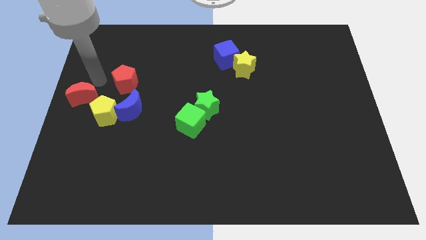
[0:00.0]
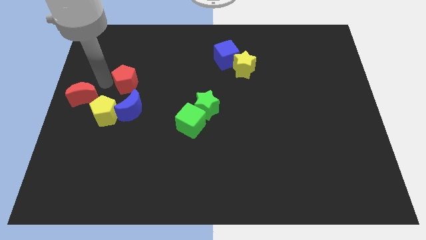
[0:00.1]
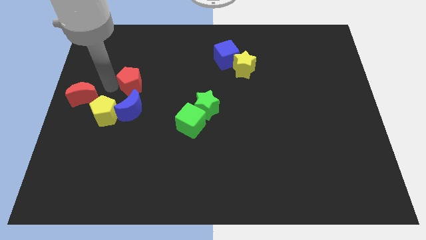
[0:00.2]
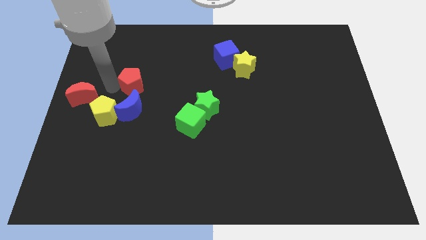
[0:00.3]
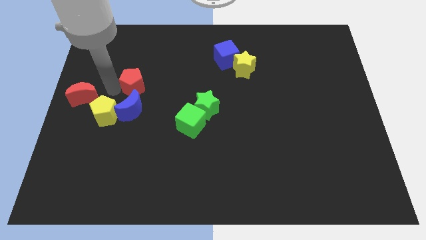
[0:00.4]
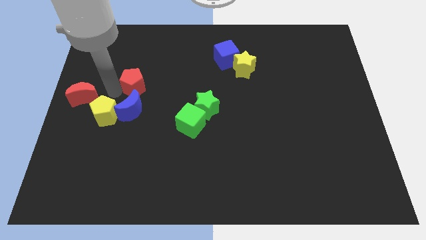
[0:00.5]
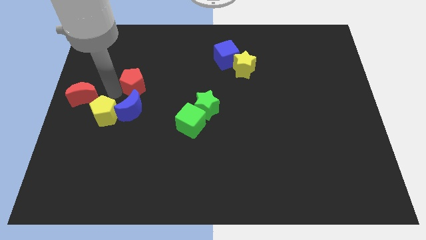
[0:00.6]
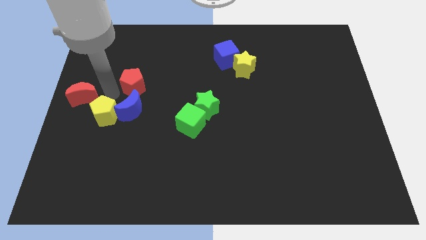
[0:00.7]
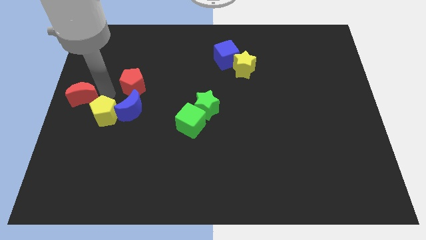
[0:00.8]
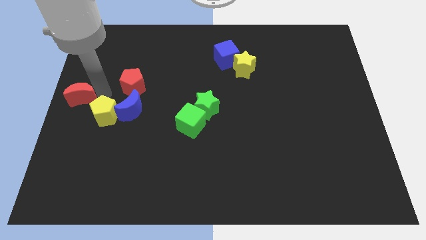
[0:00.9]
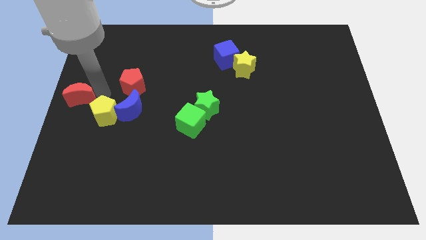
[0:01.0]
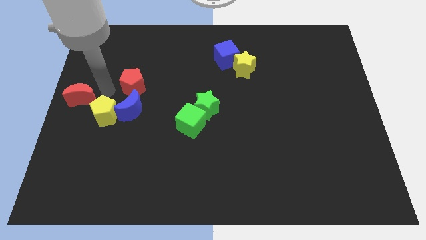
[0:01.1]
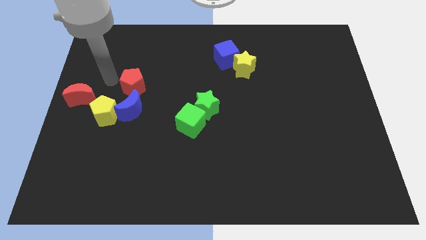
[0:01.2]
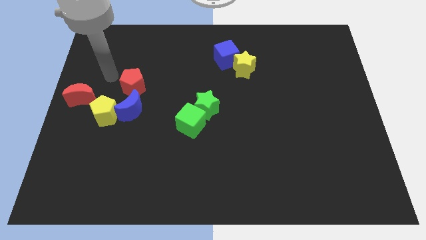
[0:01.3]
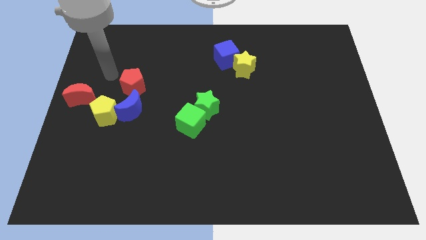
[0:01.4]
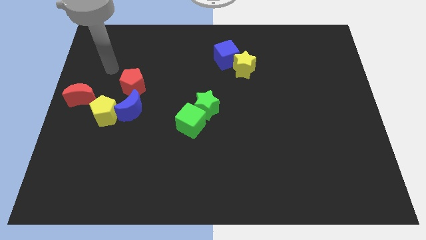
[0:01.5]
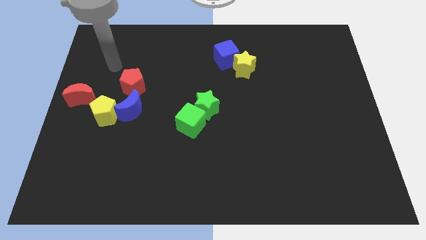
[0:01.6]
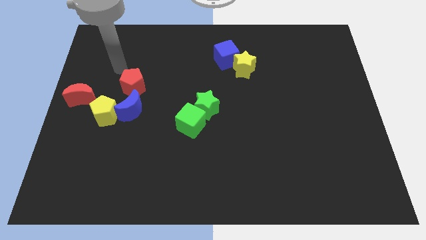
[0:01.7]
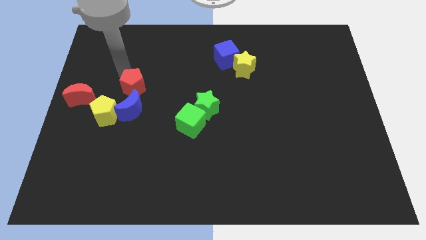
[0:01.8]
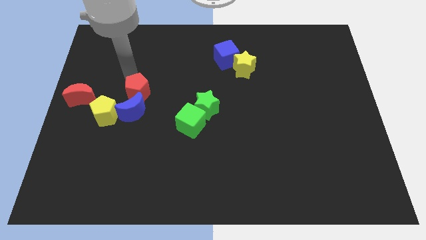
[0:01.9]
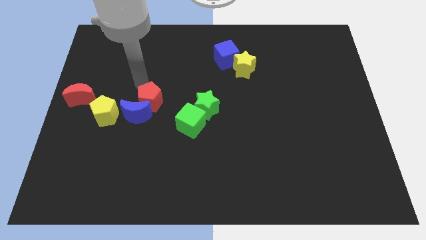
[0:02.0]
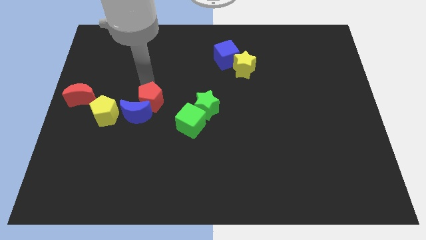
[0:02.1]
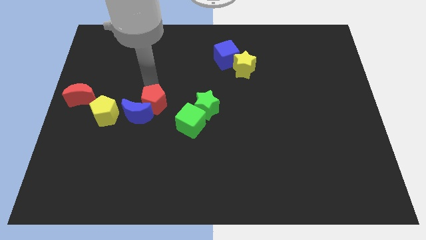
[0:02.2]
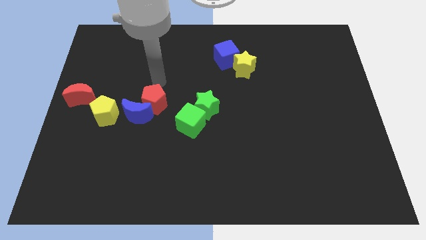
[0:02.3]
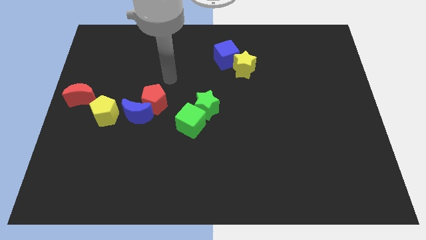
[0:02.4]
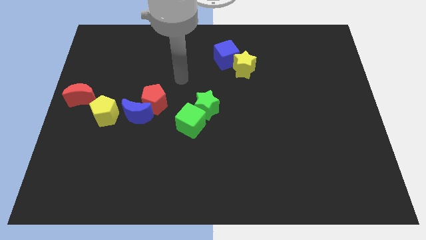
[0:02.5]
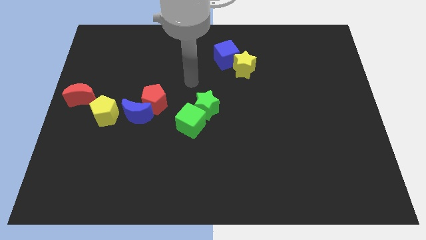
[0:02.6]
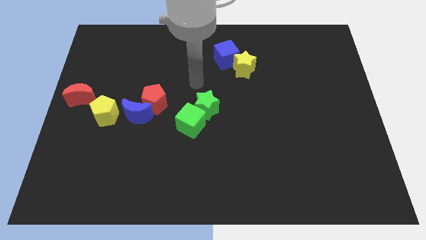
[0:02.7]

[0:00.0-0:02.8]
push the red pentagon into the right side of the blue moon

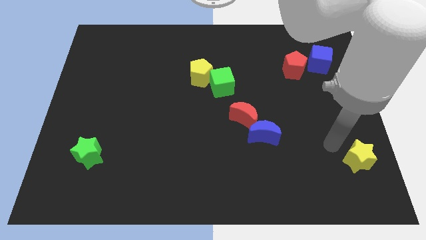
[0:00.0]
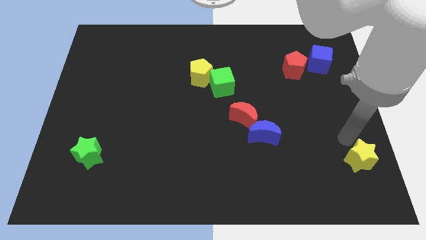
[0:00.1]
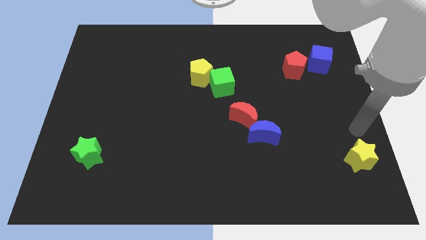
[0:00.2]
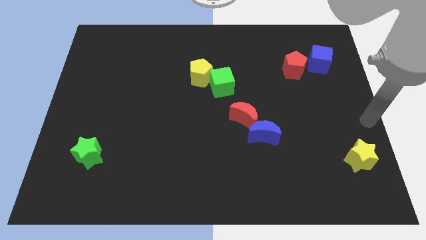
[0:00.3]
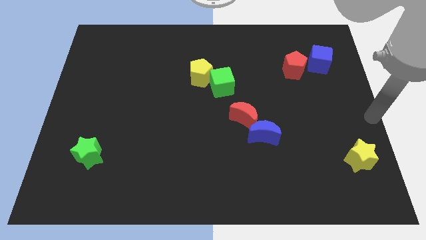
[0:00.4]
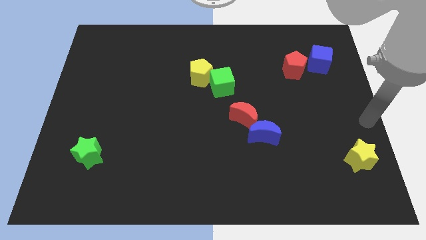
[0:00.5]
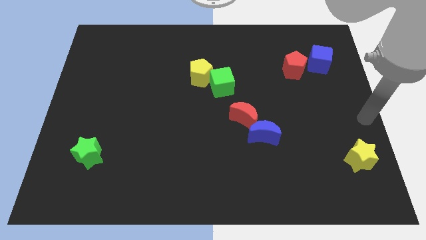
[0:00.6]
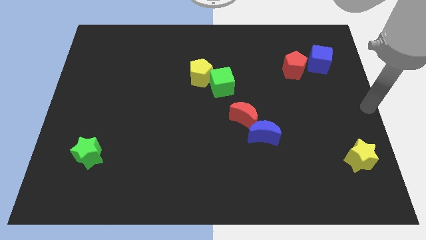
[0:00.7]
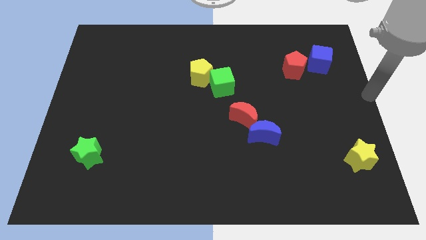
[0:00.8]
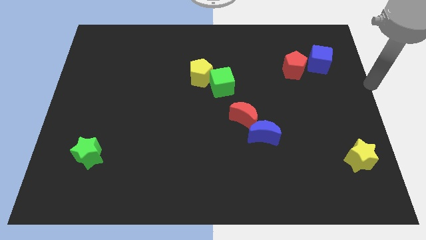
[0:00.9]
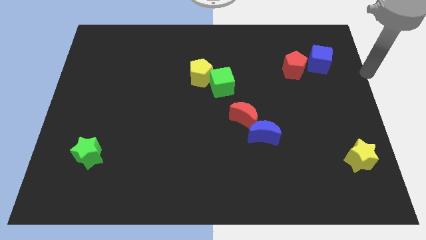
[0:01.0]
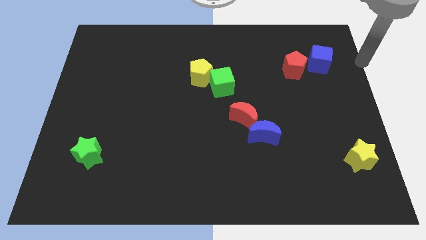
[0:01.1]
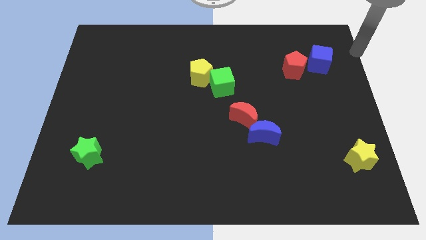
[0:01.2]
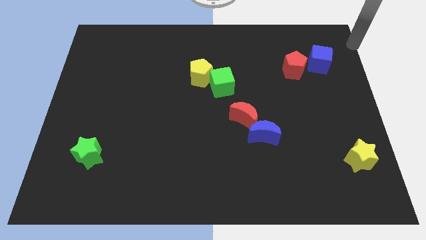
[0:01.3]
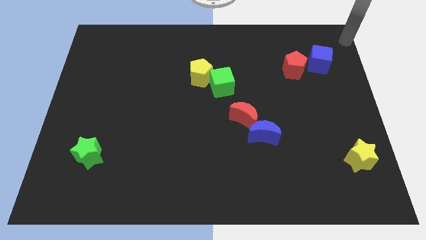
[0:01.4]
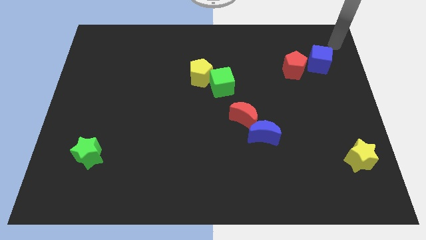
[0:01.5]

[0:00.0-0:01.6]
point your arm towards the blue cube

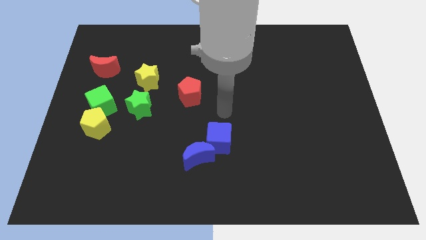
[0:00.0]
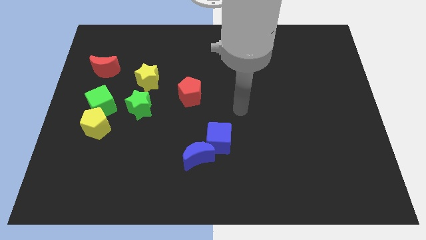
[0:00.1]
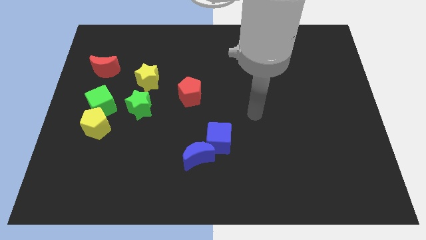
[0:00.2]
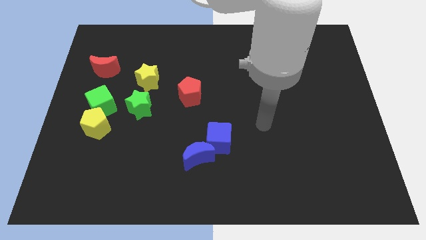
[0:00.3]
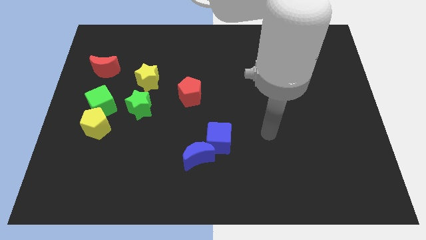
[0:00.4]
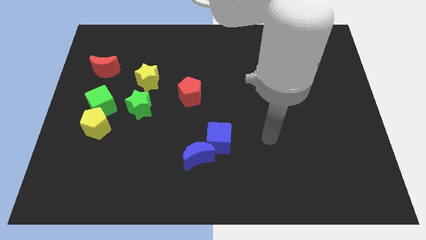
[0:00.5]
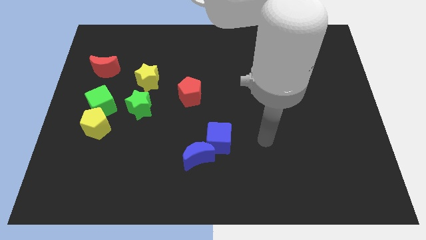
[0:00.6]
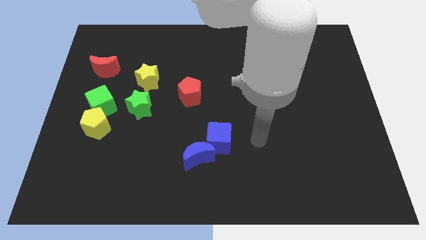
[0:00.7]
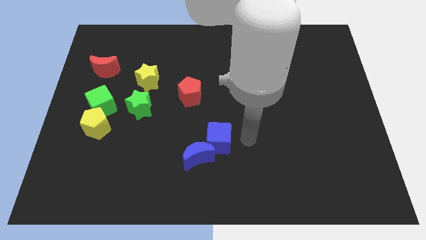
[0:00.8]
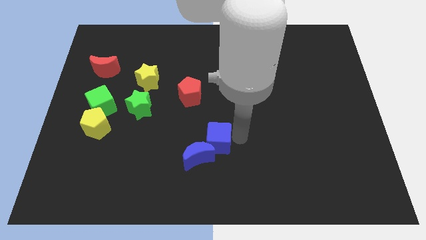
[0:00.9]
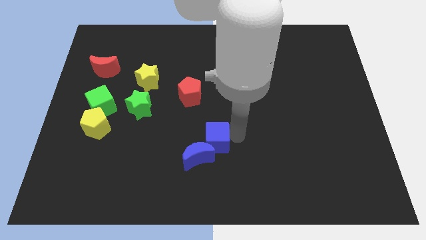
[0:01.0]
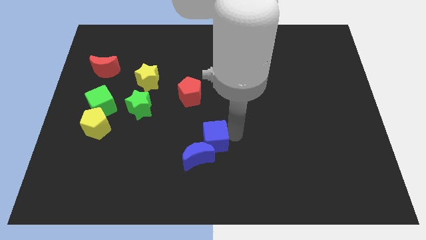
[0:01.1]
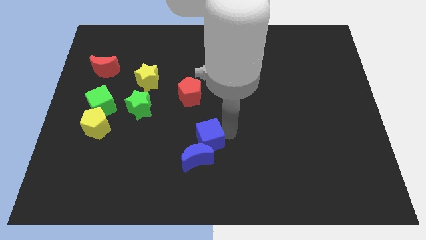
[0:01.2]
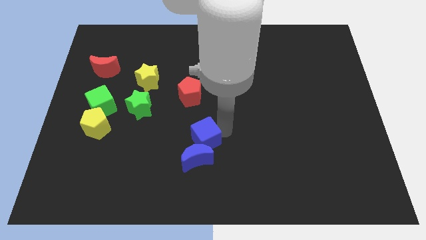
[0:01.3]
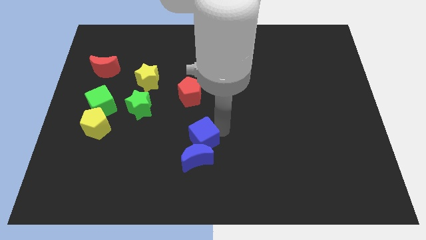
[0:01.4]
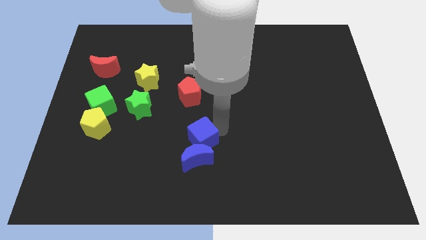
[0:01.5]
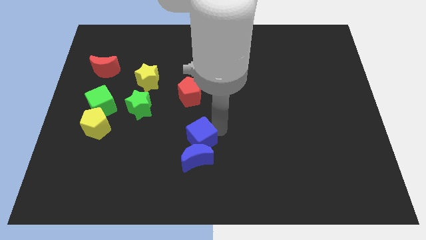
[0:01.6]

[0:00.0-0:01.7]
push the blue cube to the top of the blue crescent

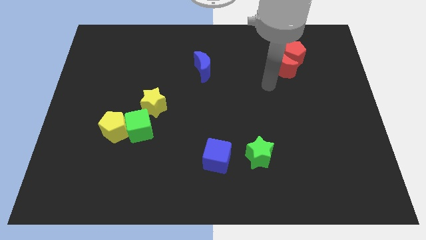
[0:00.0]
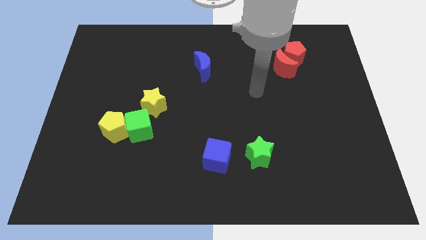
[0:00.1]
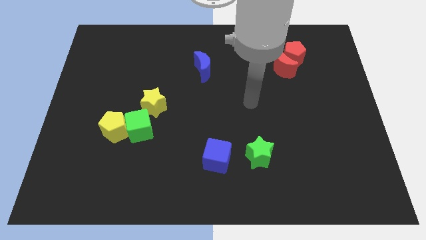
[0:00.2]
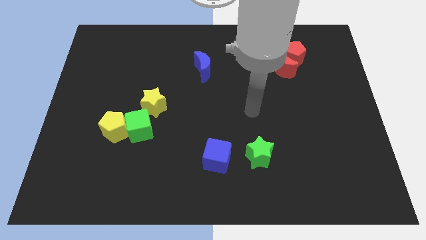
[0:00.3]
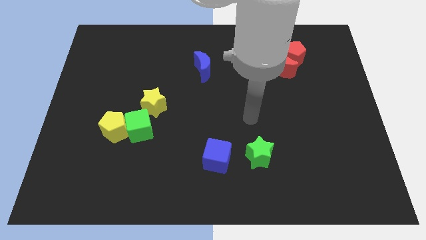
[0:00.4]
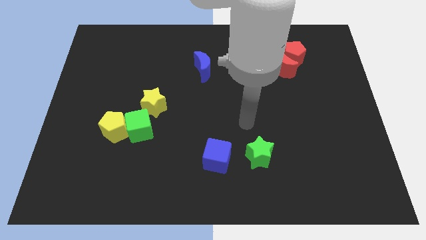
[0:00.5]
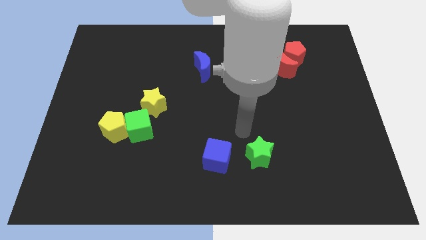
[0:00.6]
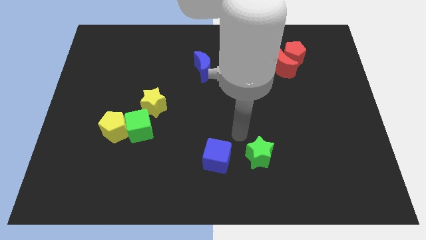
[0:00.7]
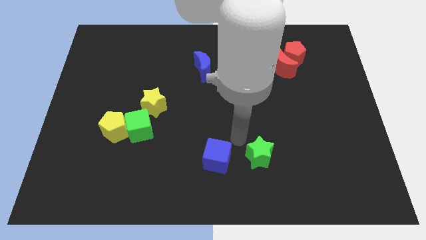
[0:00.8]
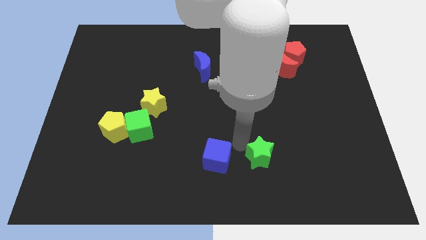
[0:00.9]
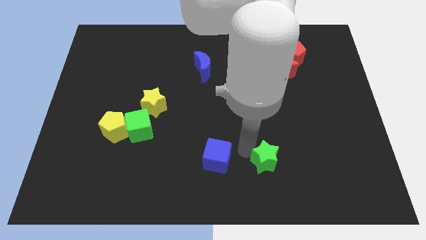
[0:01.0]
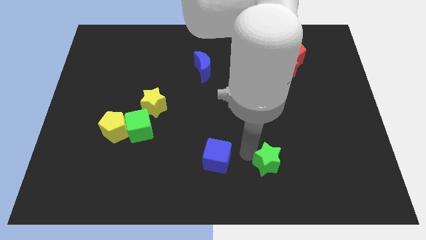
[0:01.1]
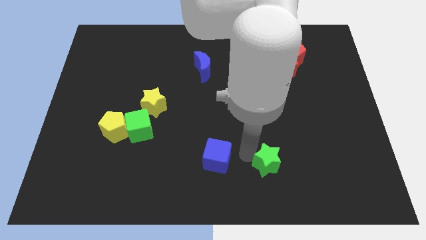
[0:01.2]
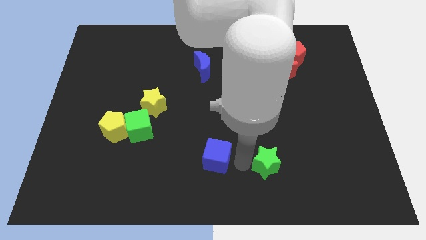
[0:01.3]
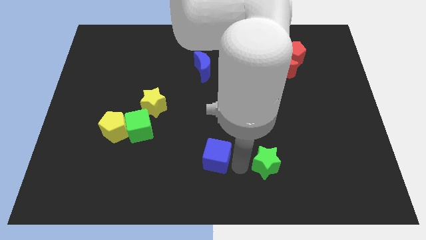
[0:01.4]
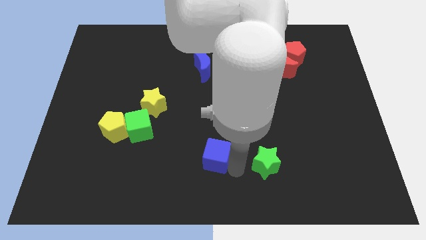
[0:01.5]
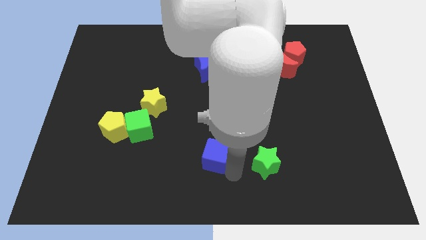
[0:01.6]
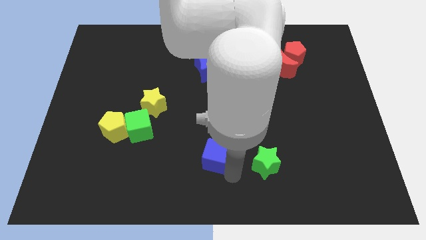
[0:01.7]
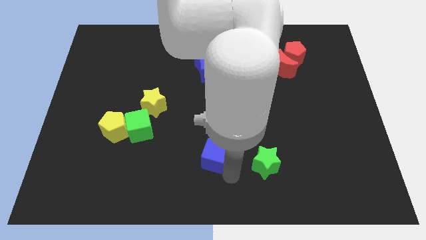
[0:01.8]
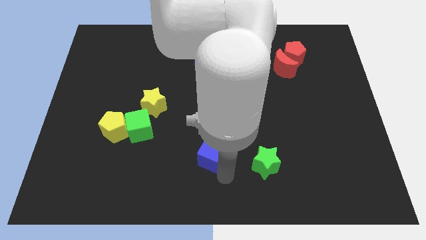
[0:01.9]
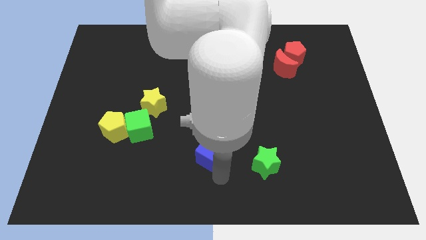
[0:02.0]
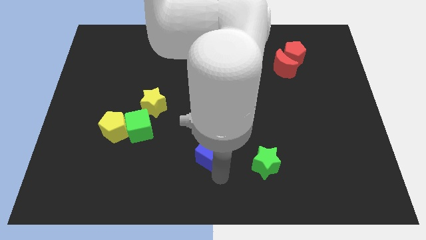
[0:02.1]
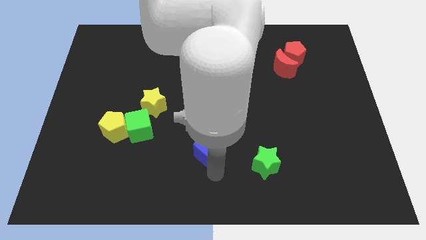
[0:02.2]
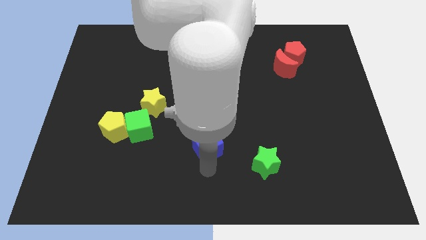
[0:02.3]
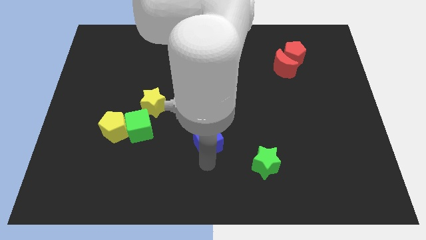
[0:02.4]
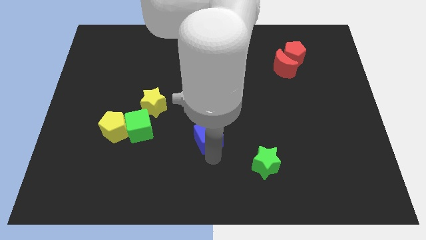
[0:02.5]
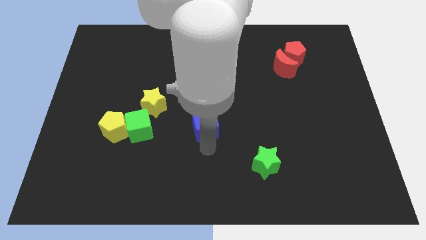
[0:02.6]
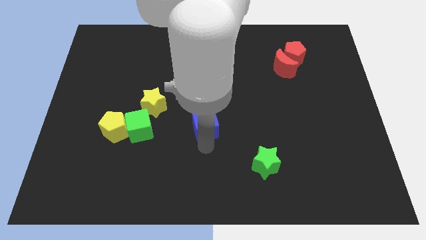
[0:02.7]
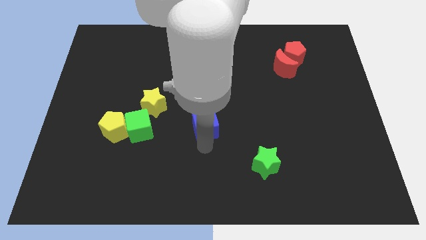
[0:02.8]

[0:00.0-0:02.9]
separate the blue cube from green star
